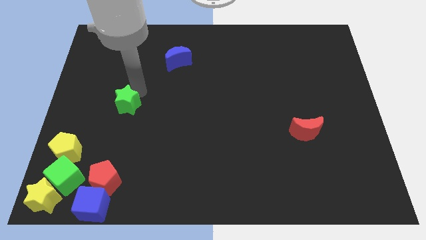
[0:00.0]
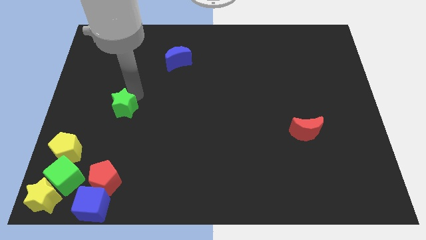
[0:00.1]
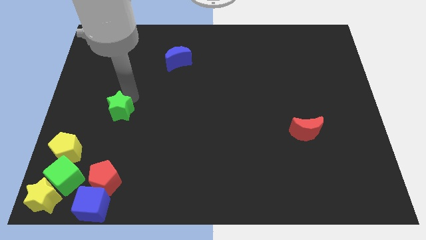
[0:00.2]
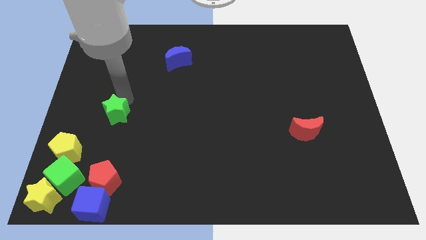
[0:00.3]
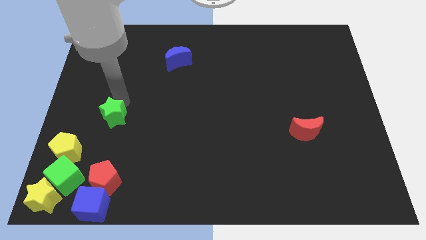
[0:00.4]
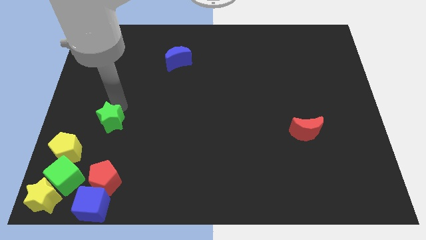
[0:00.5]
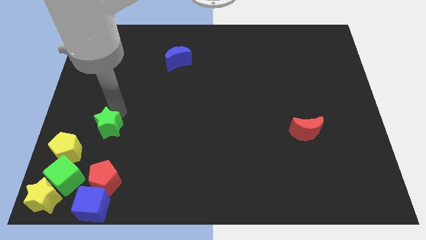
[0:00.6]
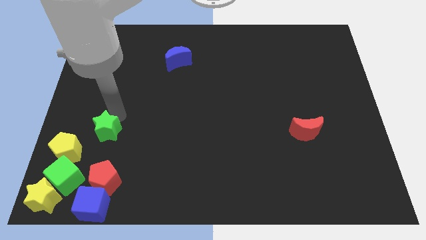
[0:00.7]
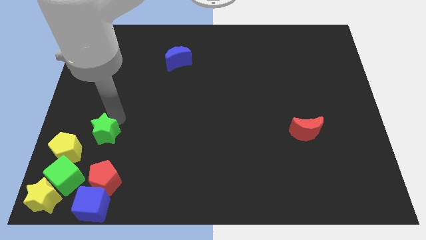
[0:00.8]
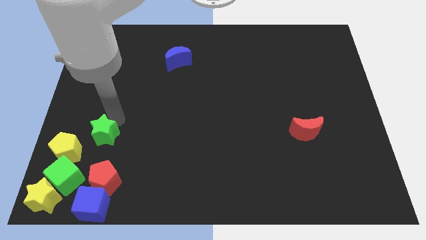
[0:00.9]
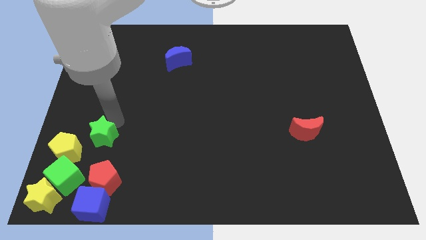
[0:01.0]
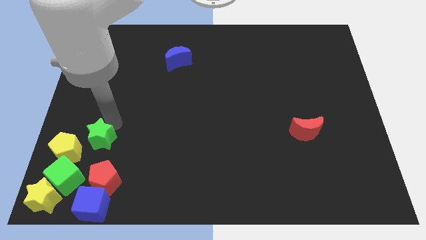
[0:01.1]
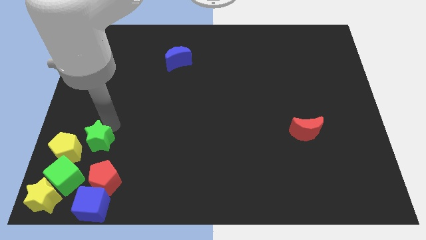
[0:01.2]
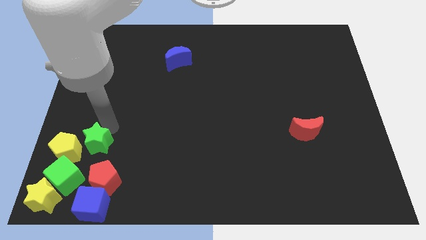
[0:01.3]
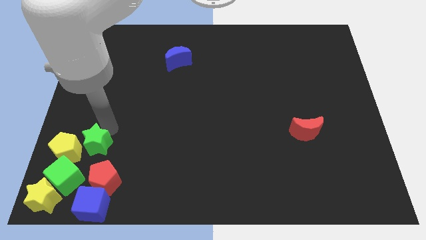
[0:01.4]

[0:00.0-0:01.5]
move the green star top right of the yellow pentagon

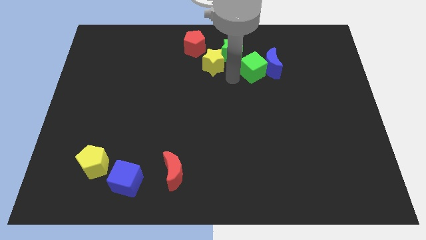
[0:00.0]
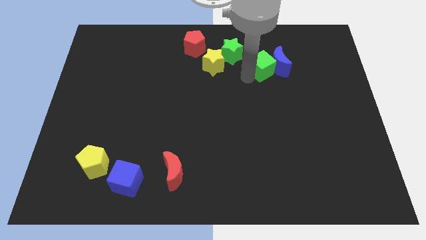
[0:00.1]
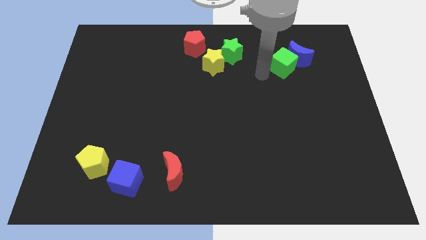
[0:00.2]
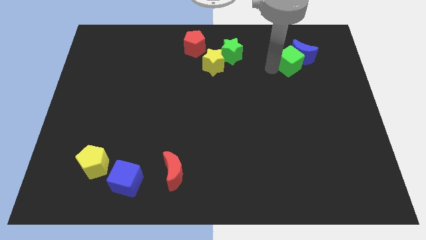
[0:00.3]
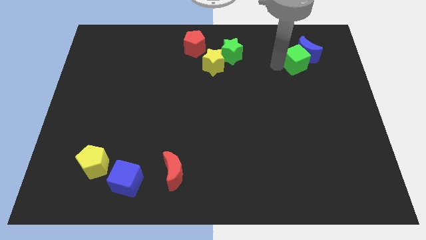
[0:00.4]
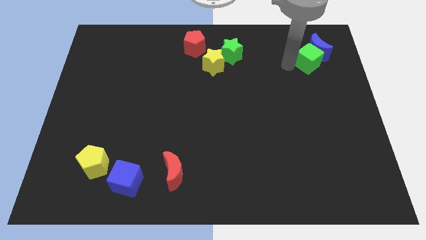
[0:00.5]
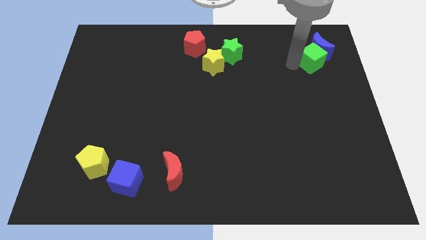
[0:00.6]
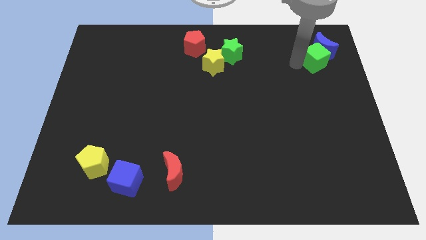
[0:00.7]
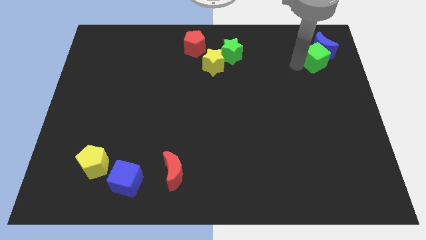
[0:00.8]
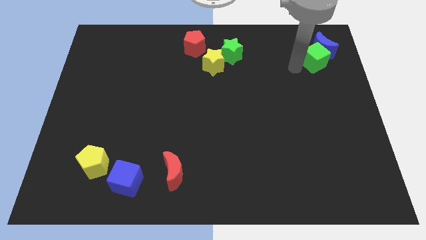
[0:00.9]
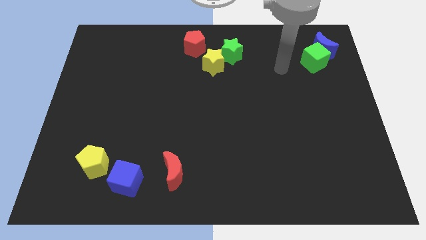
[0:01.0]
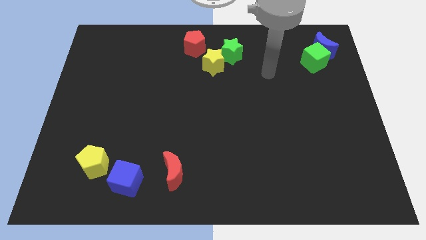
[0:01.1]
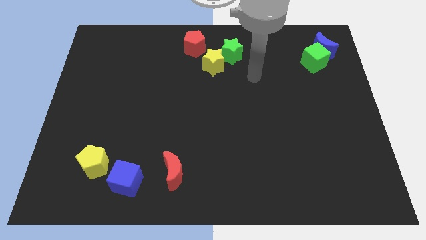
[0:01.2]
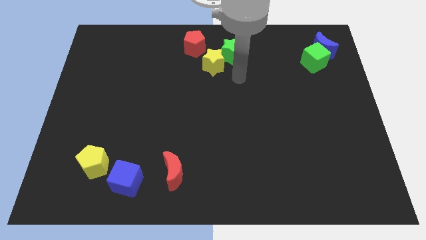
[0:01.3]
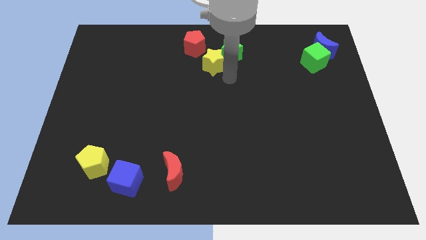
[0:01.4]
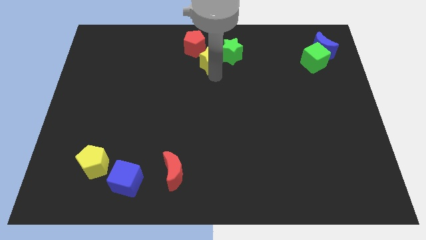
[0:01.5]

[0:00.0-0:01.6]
move green cube to the top right corner of ehe board

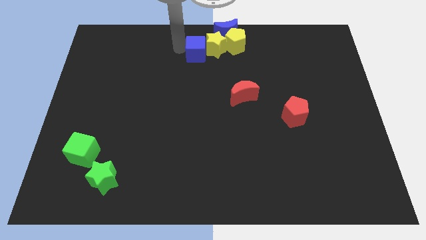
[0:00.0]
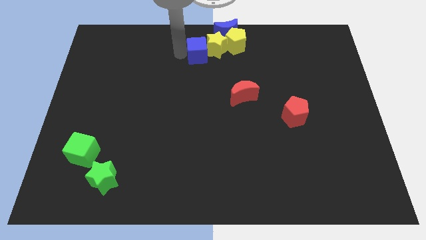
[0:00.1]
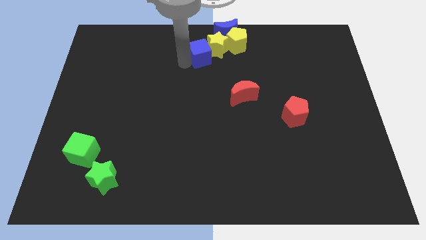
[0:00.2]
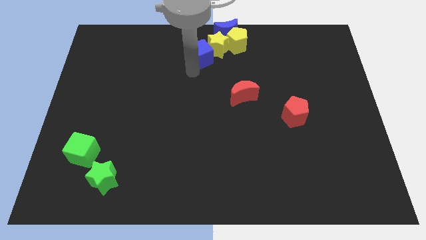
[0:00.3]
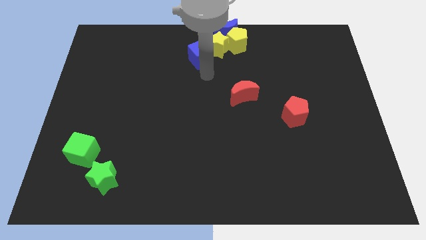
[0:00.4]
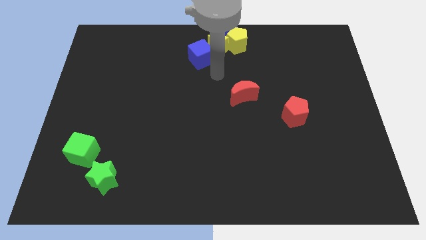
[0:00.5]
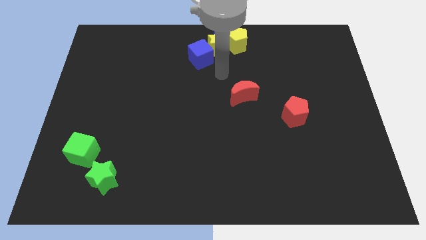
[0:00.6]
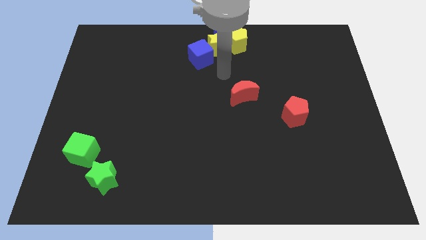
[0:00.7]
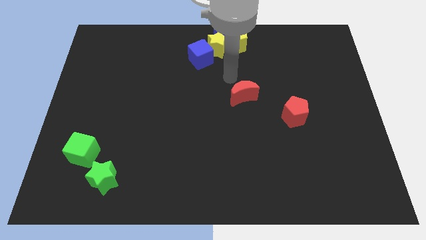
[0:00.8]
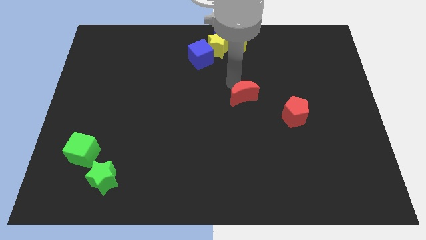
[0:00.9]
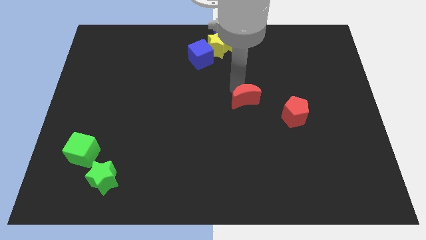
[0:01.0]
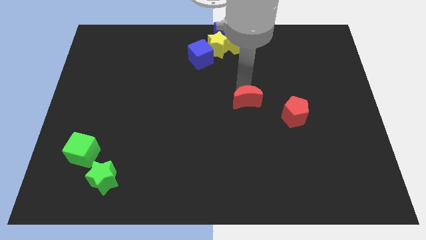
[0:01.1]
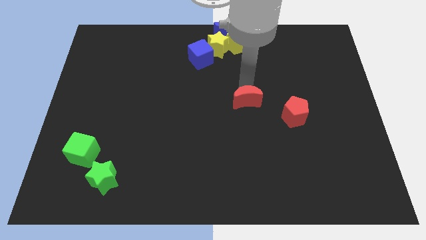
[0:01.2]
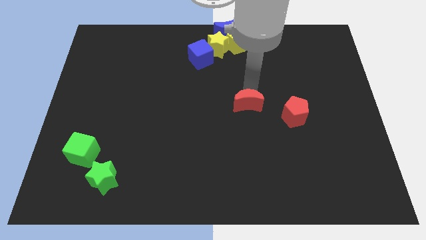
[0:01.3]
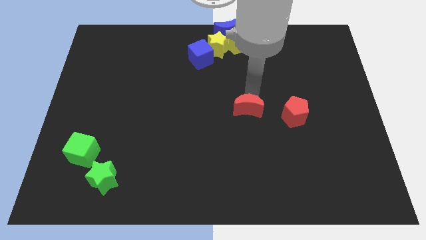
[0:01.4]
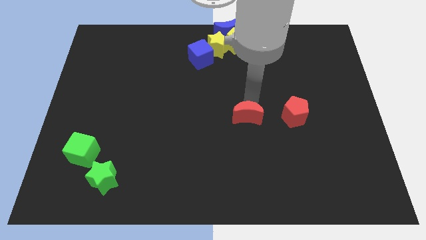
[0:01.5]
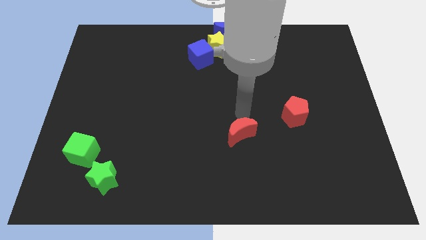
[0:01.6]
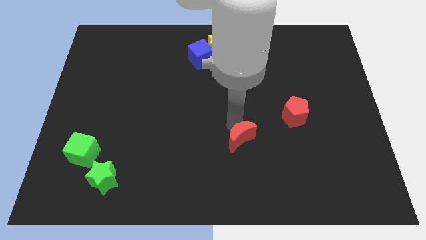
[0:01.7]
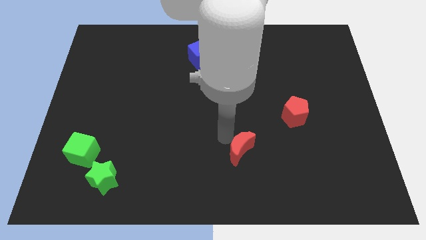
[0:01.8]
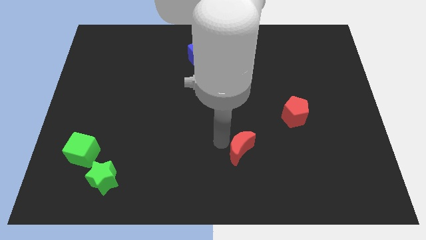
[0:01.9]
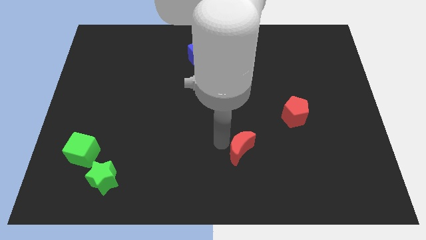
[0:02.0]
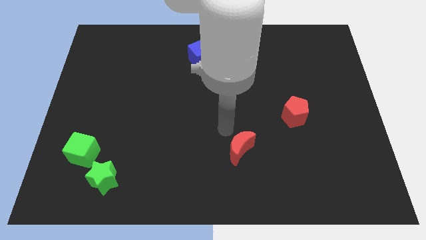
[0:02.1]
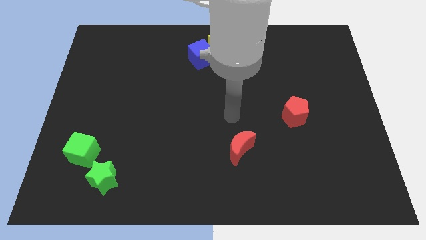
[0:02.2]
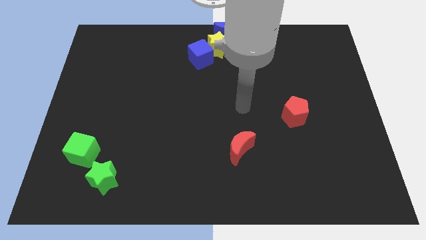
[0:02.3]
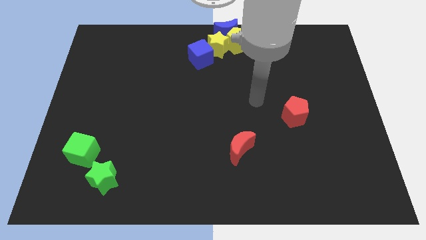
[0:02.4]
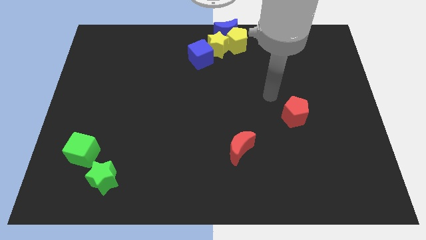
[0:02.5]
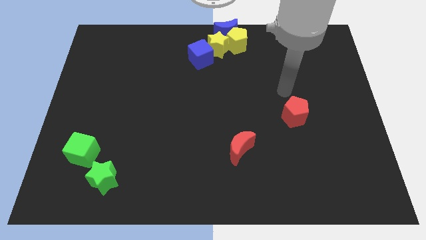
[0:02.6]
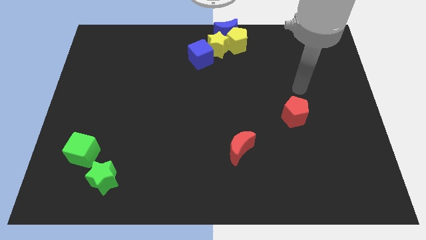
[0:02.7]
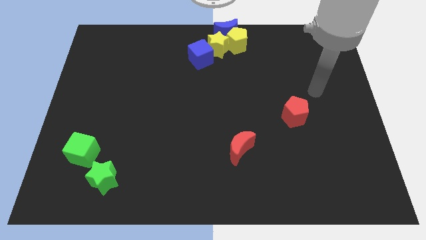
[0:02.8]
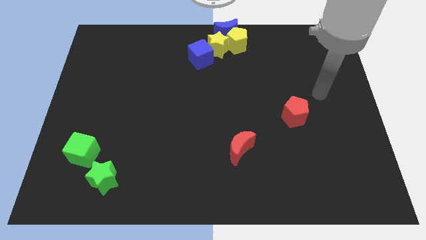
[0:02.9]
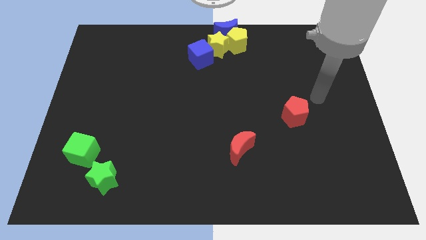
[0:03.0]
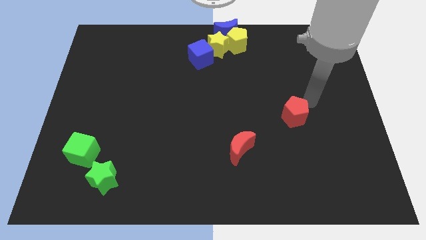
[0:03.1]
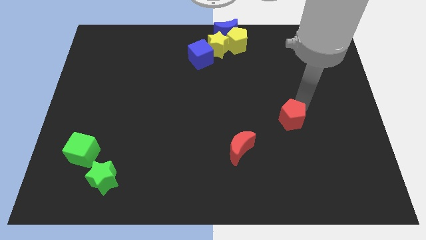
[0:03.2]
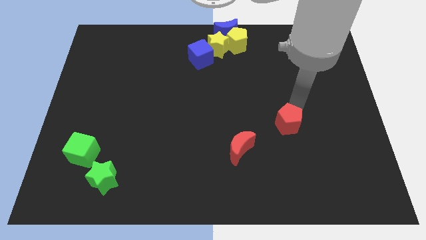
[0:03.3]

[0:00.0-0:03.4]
push the red pentagon towards bottom center of the board

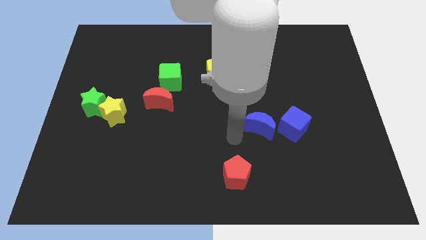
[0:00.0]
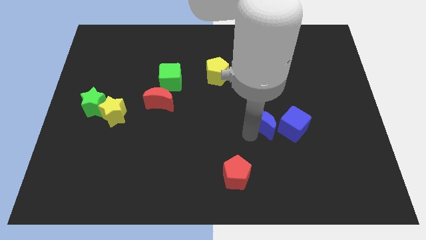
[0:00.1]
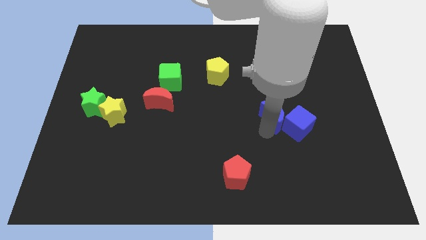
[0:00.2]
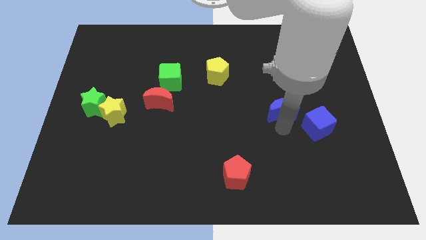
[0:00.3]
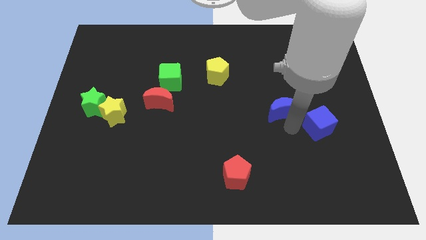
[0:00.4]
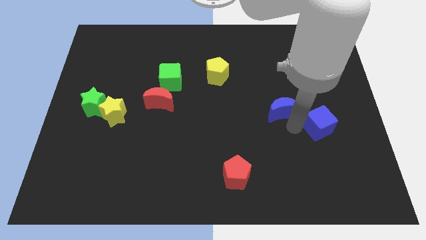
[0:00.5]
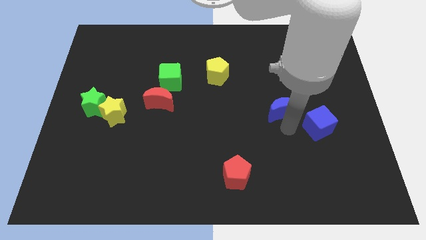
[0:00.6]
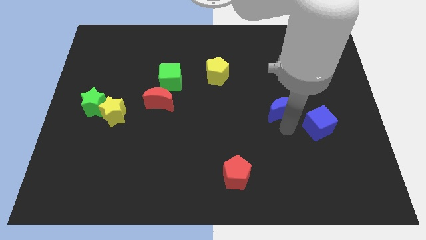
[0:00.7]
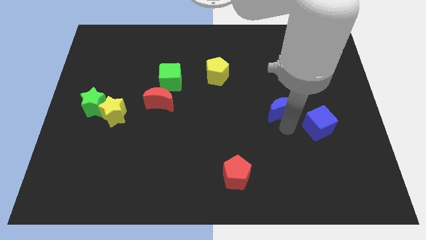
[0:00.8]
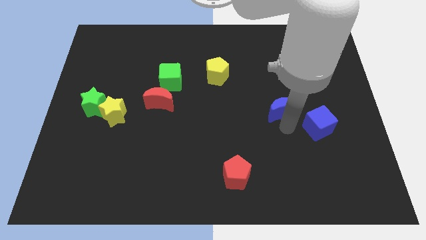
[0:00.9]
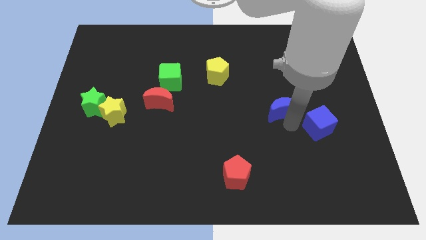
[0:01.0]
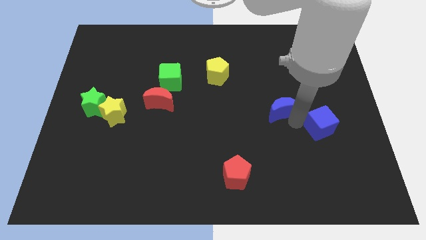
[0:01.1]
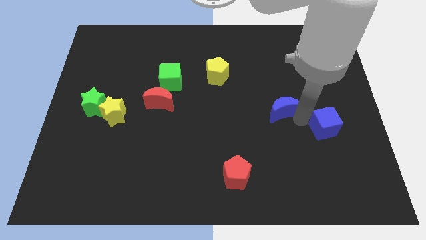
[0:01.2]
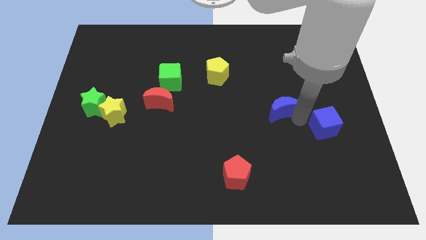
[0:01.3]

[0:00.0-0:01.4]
move the blue crescent left above the blue cube

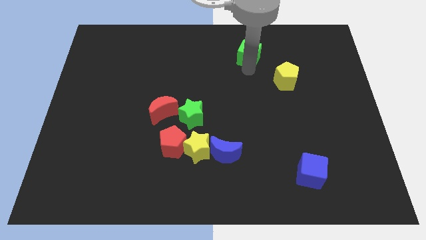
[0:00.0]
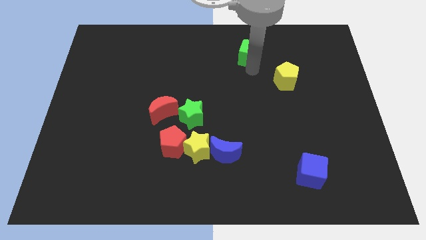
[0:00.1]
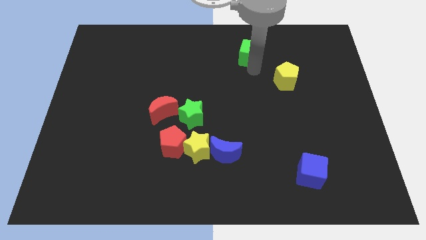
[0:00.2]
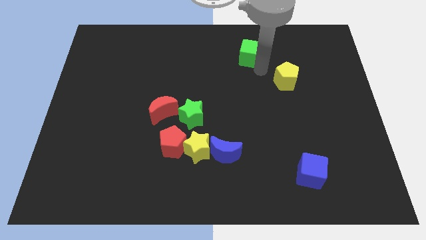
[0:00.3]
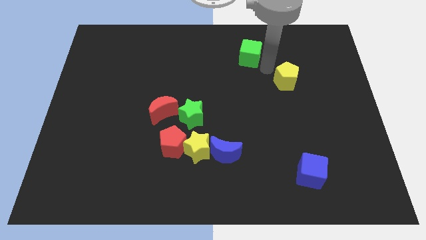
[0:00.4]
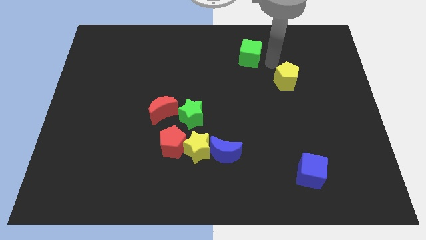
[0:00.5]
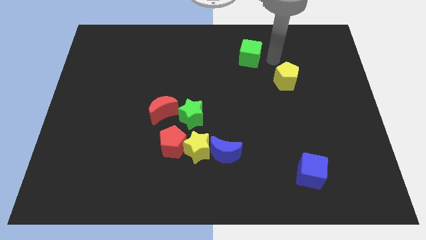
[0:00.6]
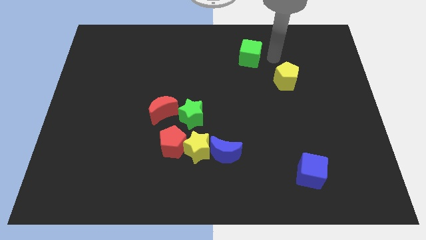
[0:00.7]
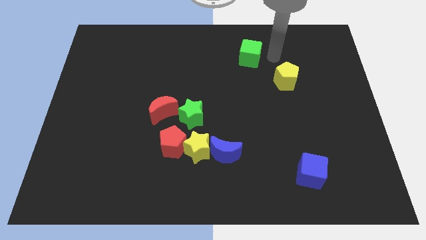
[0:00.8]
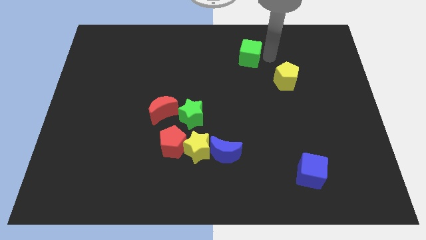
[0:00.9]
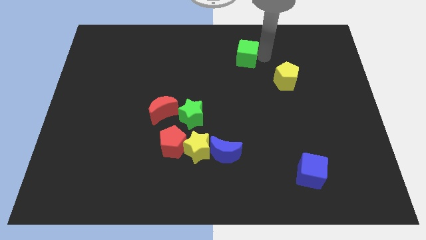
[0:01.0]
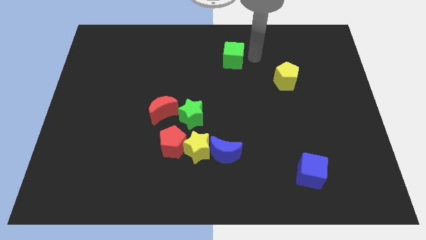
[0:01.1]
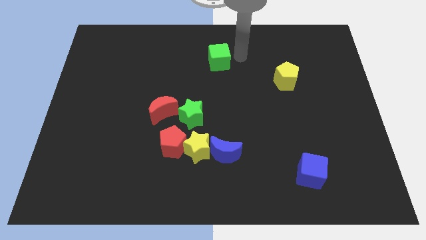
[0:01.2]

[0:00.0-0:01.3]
move the green cube vertically at the top side of the blue crescent
